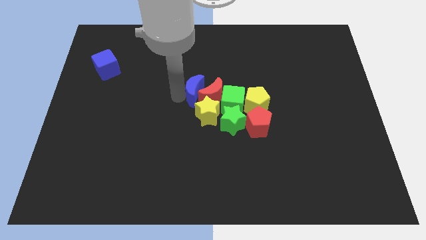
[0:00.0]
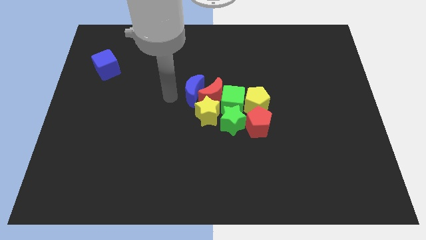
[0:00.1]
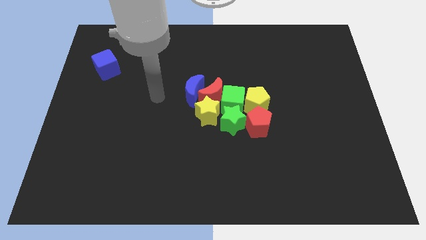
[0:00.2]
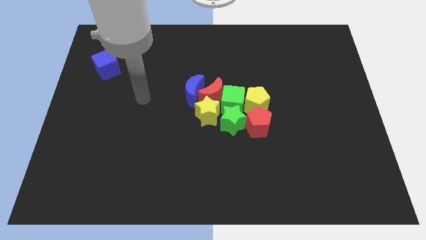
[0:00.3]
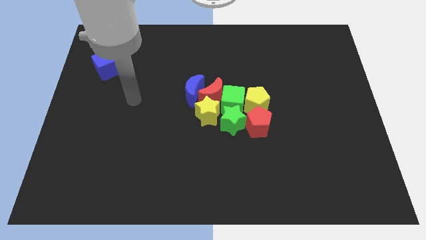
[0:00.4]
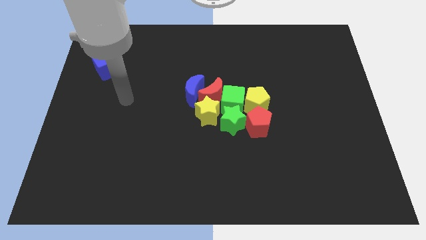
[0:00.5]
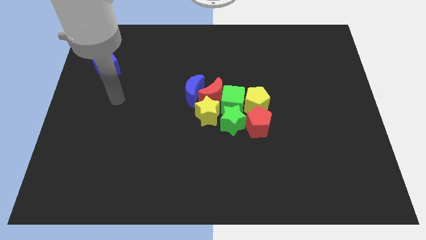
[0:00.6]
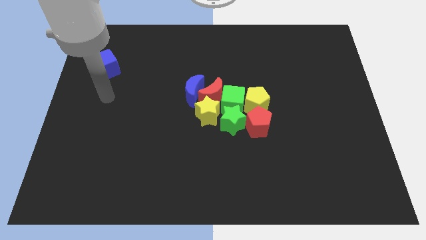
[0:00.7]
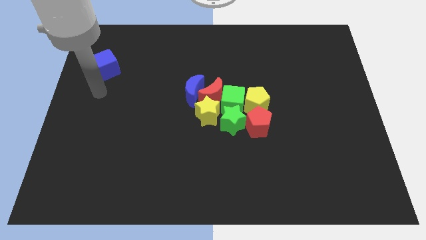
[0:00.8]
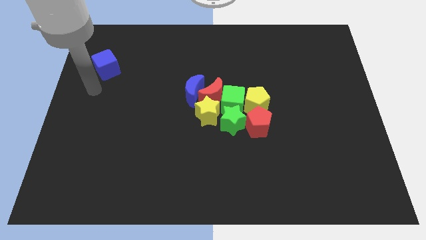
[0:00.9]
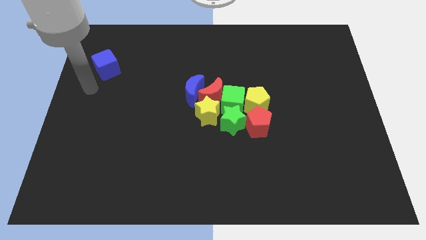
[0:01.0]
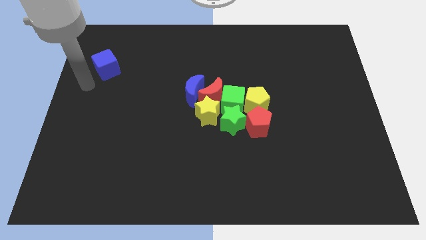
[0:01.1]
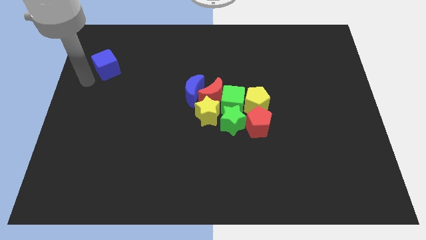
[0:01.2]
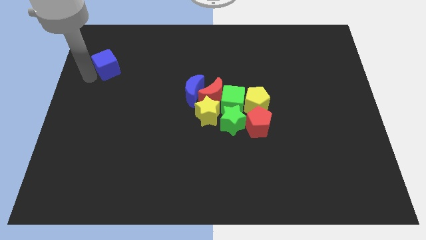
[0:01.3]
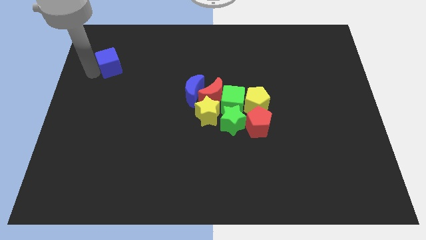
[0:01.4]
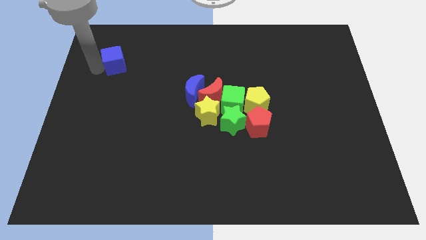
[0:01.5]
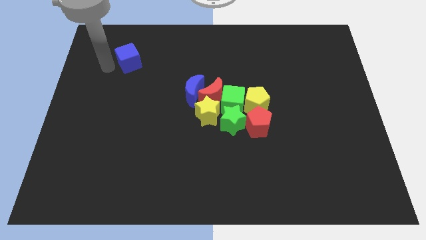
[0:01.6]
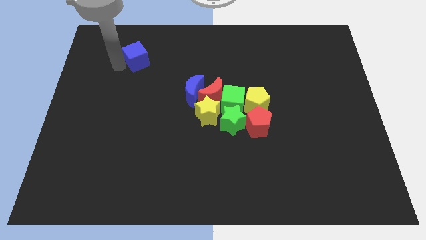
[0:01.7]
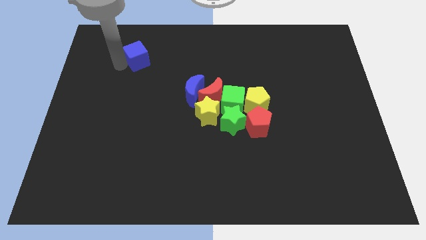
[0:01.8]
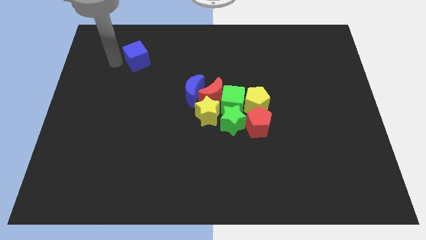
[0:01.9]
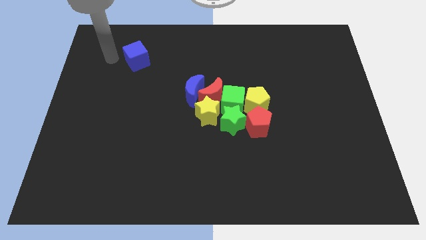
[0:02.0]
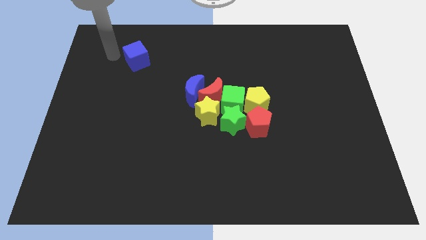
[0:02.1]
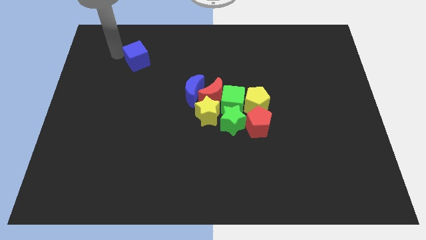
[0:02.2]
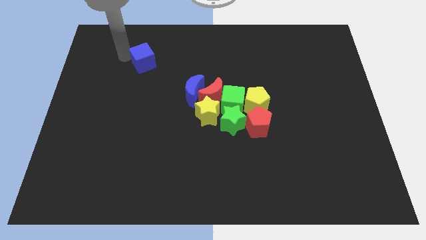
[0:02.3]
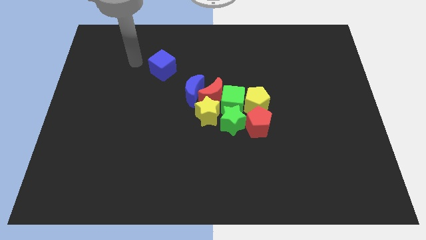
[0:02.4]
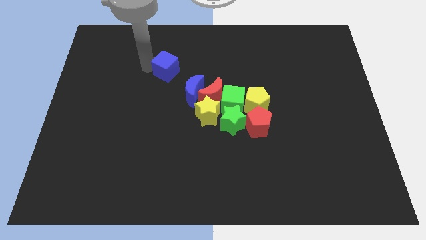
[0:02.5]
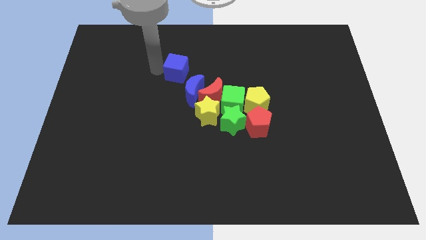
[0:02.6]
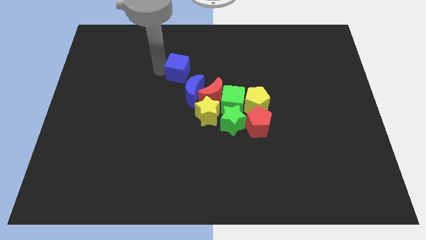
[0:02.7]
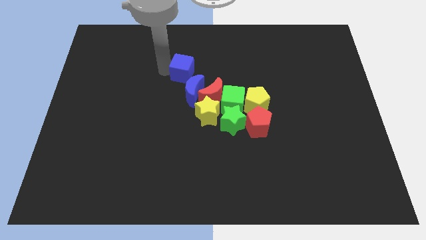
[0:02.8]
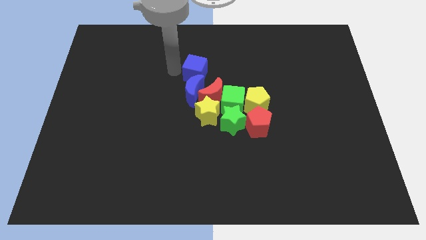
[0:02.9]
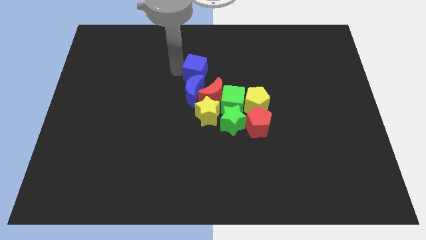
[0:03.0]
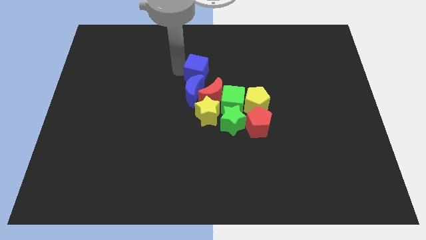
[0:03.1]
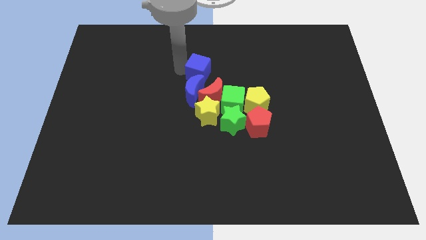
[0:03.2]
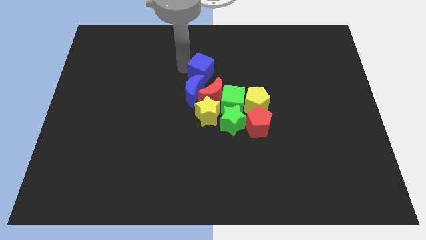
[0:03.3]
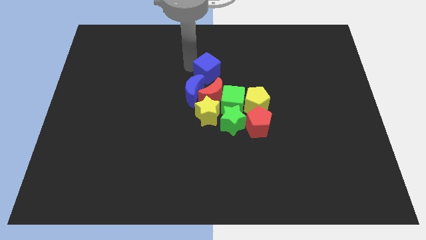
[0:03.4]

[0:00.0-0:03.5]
place the blue cube above the blue crescent

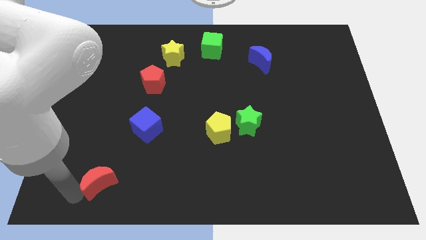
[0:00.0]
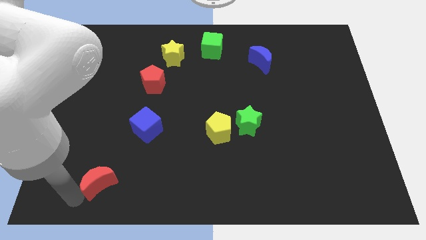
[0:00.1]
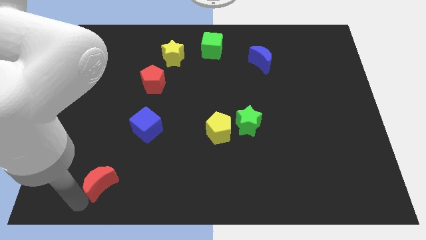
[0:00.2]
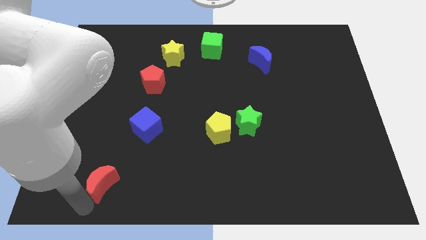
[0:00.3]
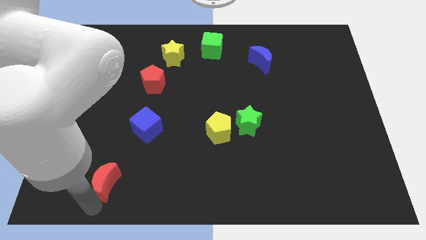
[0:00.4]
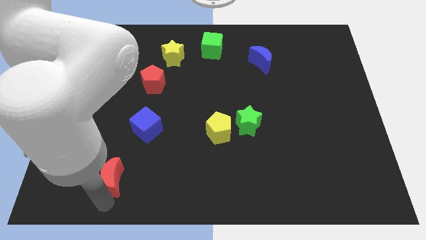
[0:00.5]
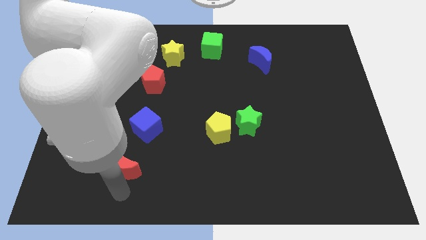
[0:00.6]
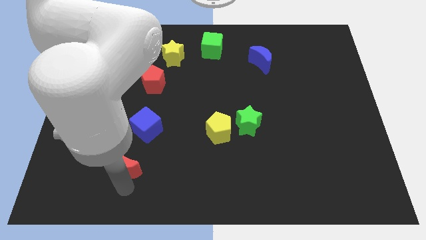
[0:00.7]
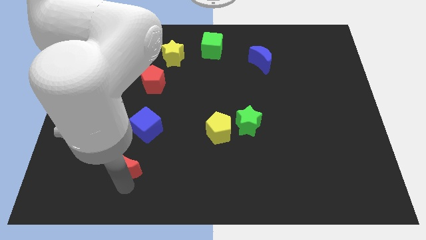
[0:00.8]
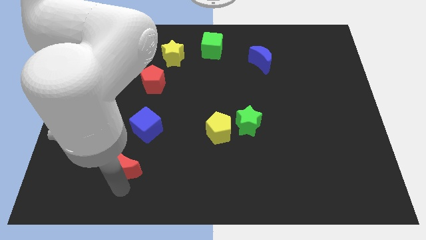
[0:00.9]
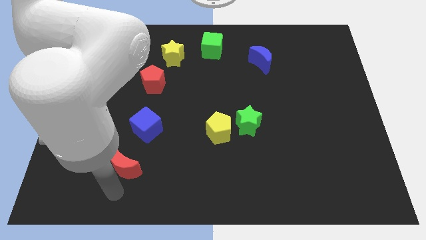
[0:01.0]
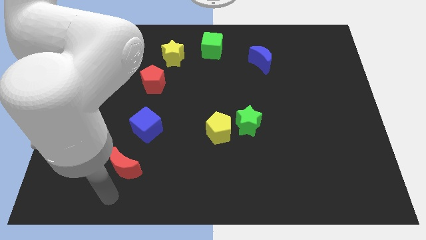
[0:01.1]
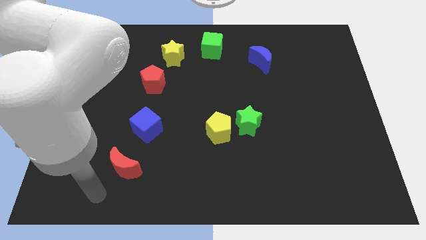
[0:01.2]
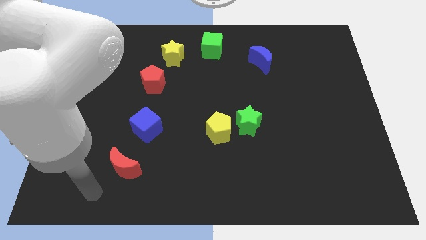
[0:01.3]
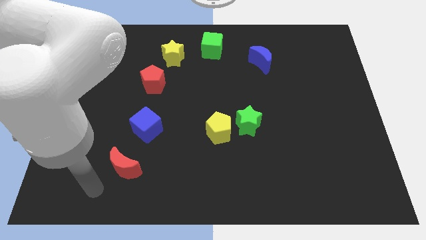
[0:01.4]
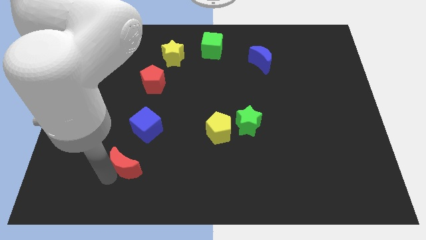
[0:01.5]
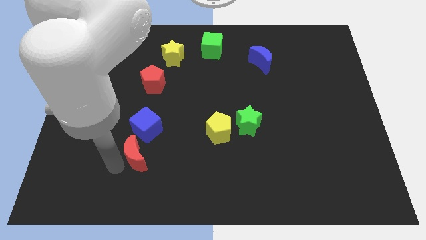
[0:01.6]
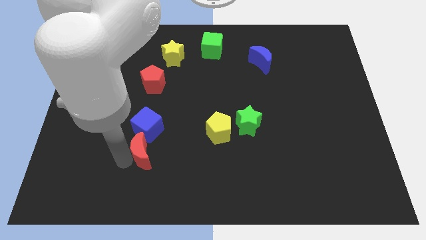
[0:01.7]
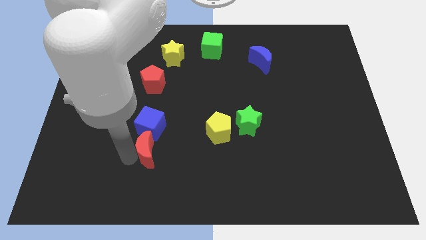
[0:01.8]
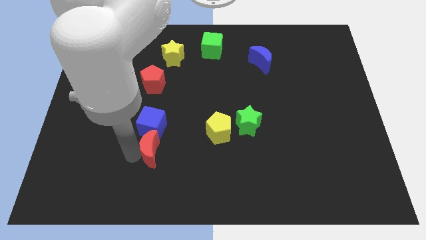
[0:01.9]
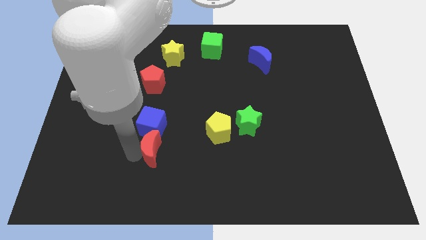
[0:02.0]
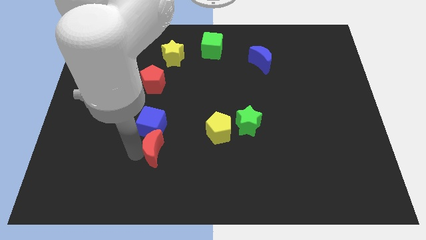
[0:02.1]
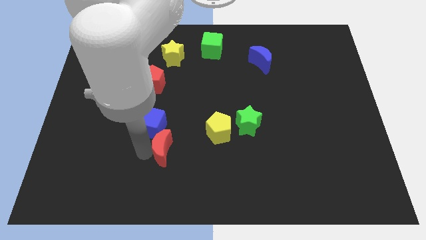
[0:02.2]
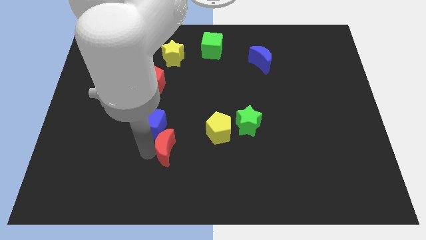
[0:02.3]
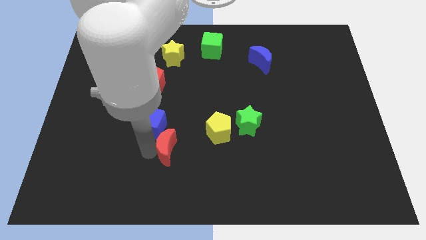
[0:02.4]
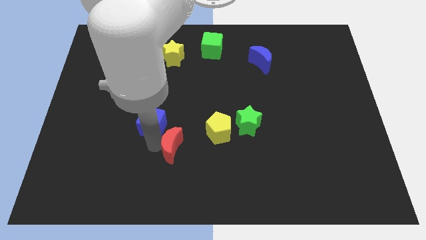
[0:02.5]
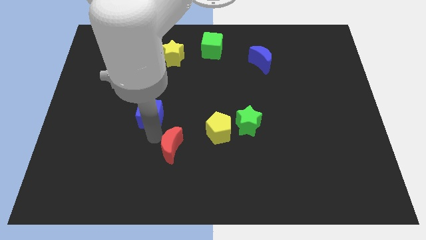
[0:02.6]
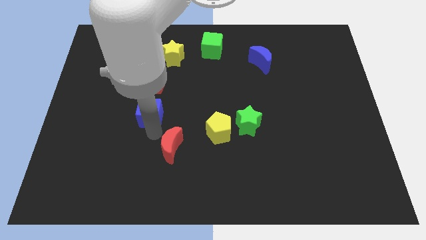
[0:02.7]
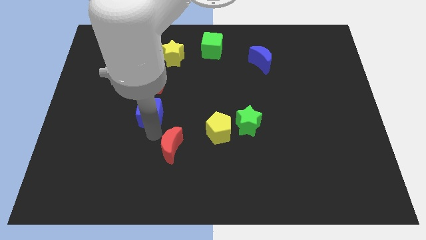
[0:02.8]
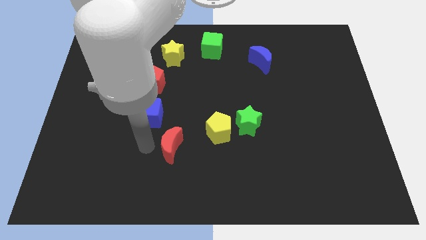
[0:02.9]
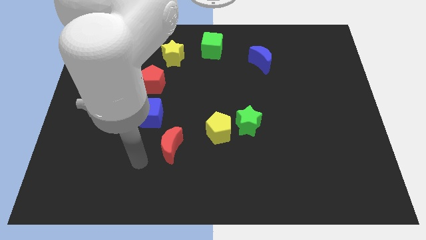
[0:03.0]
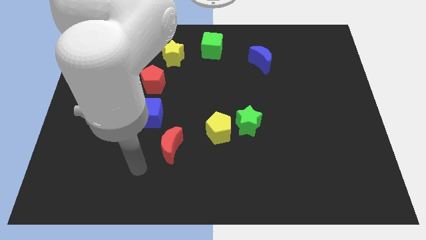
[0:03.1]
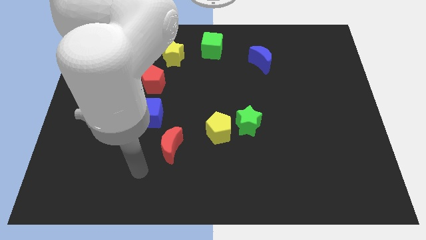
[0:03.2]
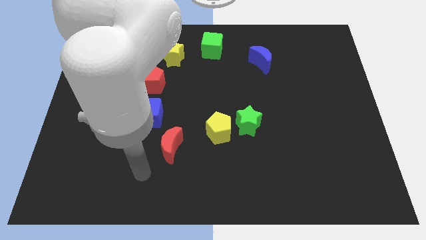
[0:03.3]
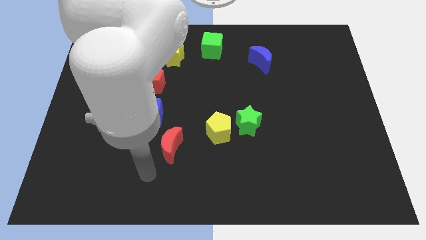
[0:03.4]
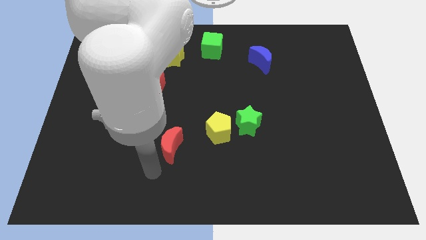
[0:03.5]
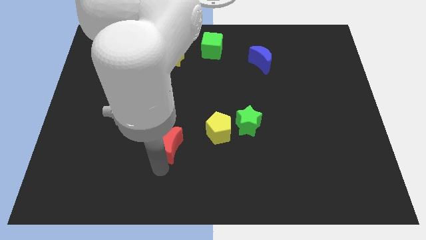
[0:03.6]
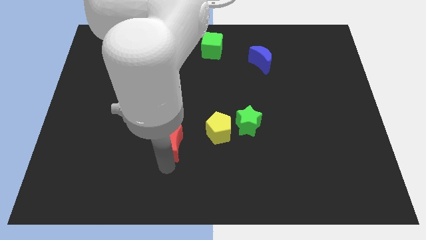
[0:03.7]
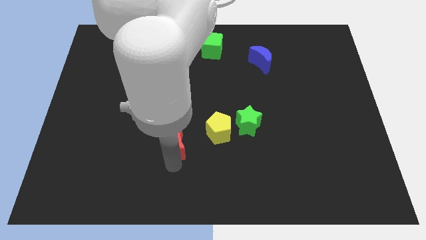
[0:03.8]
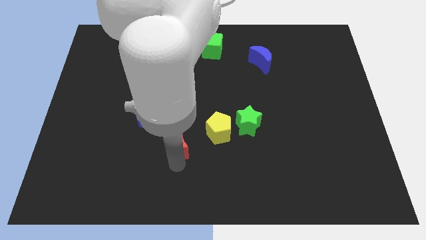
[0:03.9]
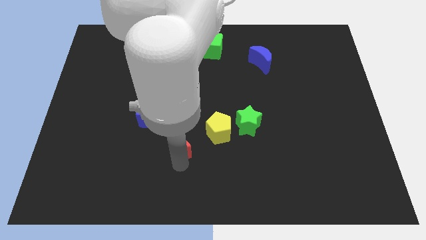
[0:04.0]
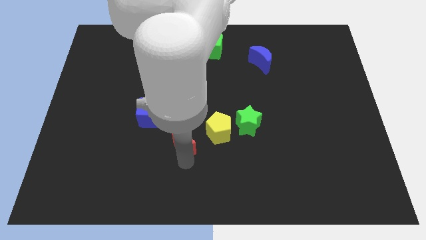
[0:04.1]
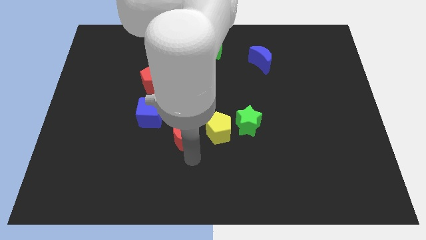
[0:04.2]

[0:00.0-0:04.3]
place the blue cube in between the red crescent and red pentagon

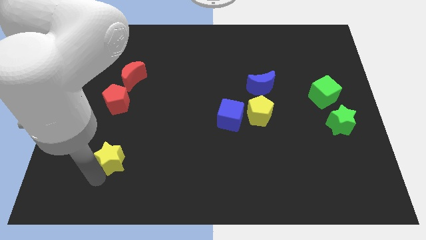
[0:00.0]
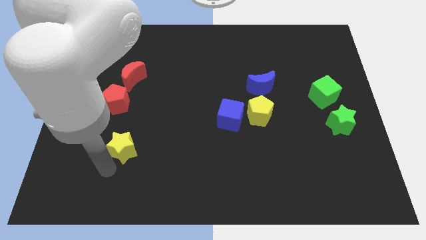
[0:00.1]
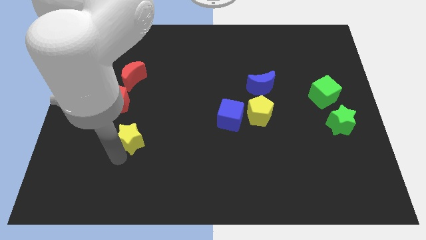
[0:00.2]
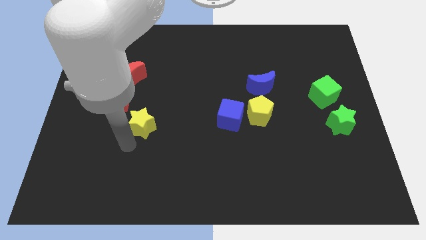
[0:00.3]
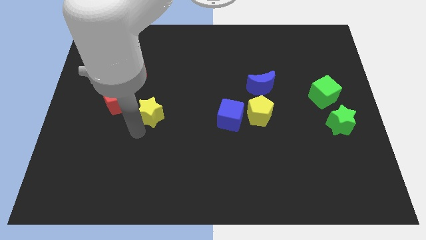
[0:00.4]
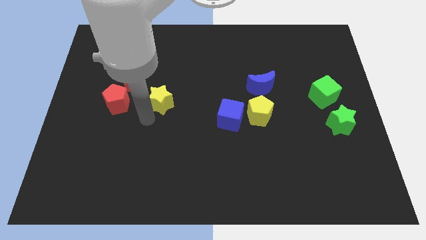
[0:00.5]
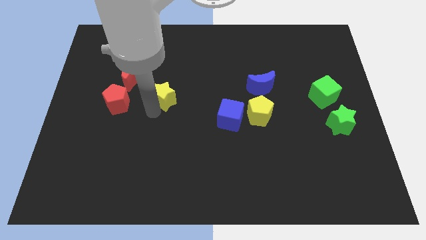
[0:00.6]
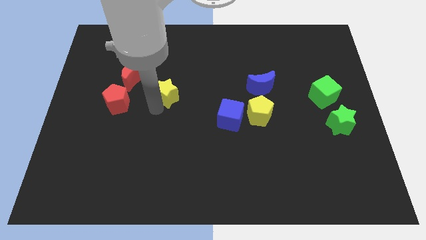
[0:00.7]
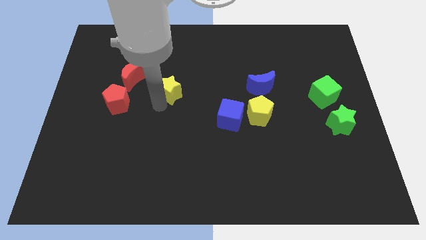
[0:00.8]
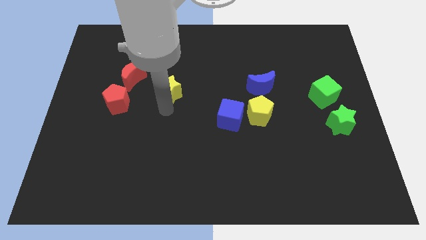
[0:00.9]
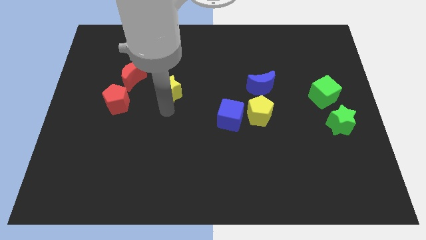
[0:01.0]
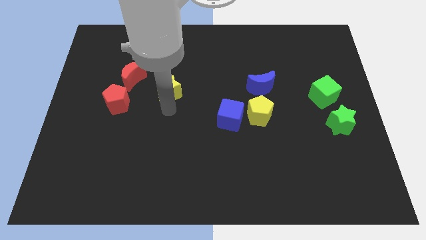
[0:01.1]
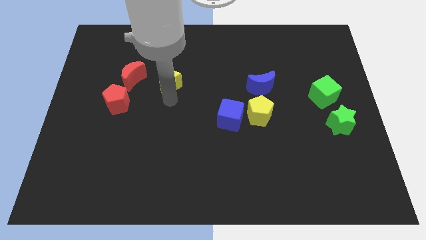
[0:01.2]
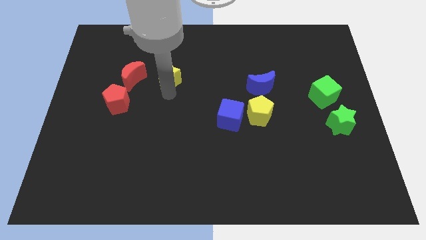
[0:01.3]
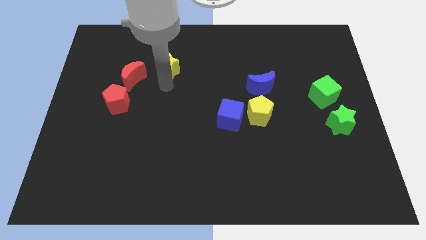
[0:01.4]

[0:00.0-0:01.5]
move the yellow star right to the red crescent
